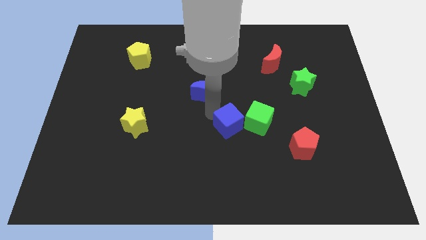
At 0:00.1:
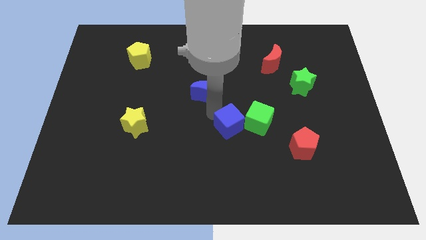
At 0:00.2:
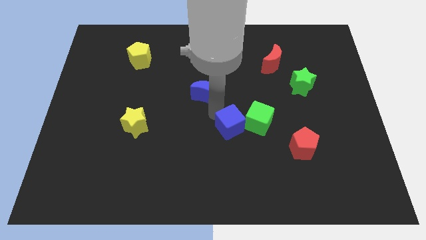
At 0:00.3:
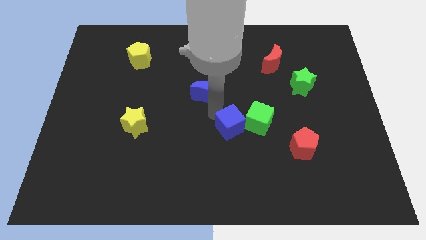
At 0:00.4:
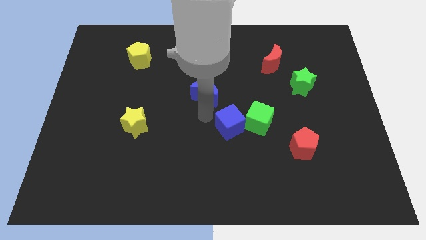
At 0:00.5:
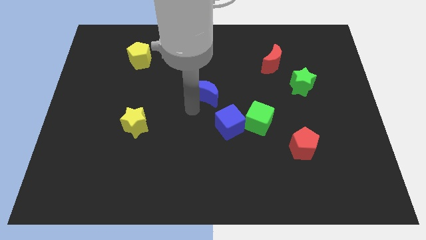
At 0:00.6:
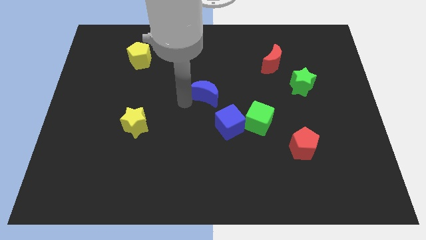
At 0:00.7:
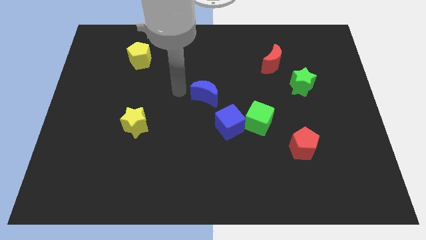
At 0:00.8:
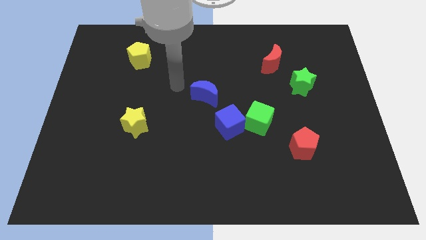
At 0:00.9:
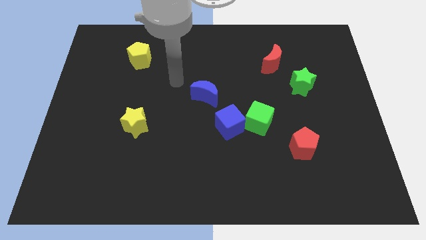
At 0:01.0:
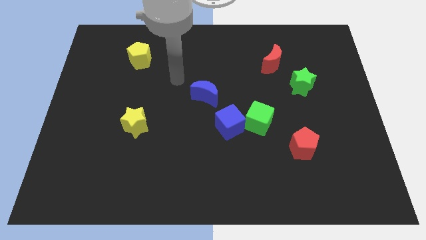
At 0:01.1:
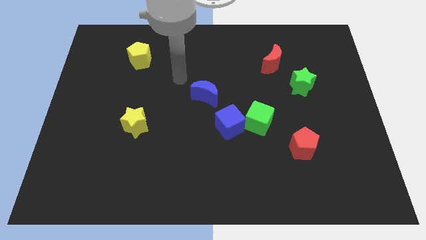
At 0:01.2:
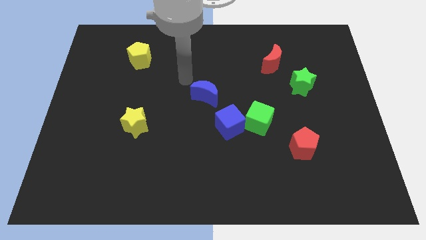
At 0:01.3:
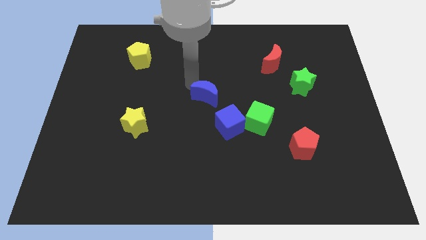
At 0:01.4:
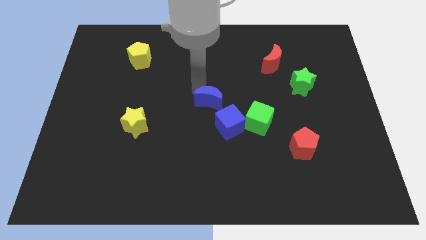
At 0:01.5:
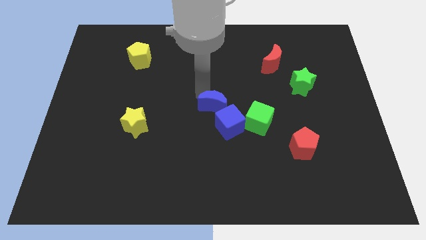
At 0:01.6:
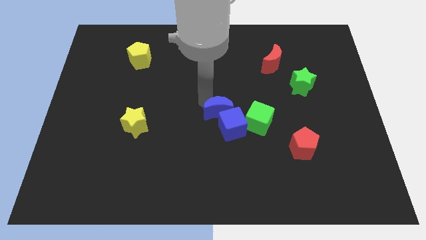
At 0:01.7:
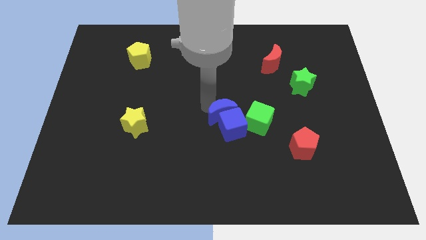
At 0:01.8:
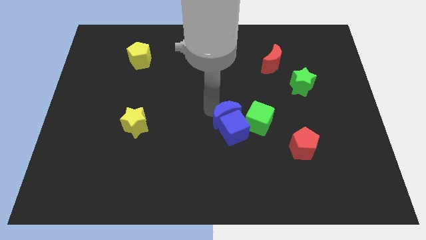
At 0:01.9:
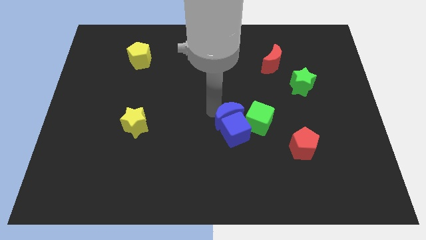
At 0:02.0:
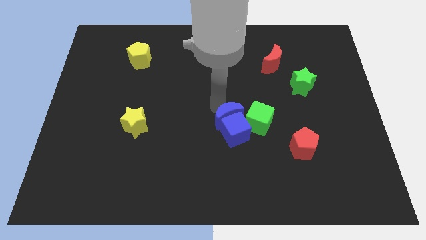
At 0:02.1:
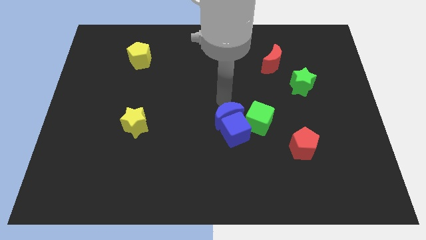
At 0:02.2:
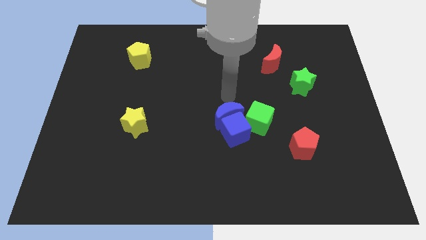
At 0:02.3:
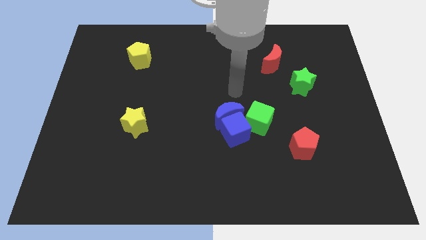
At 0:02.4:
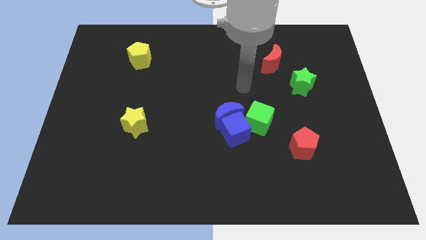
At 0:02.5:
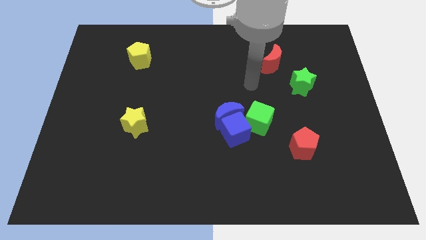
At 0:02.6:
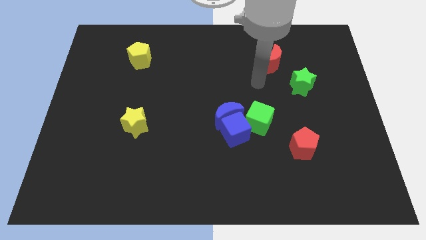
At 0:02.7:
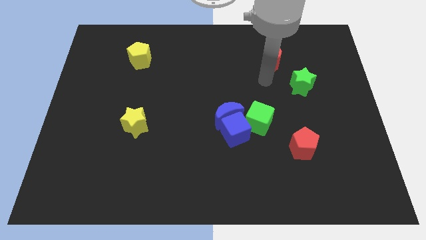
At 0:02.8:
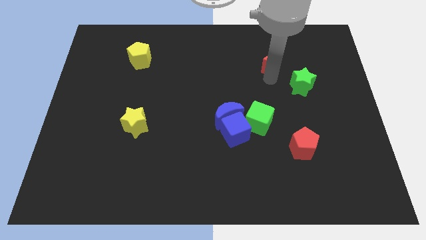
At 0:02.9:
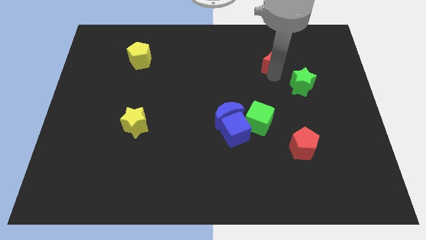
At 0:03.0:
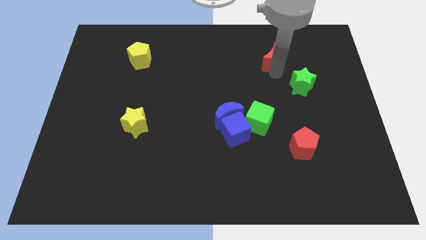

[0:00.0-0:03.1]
place the arm down to the red moon

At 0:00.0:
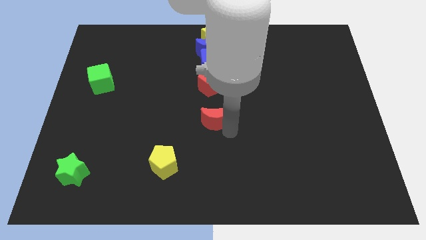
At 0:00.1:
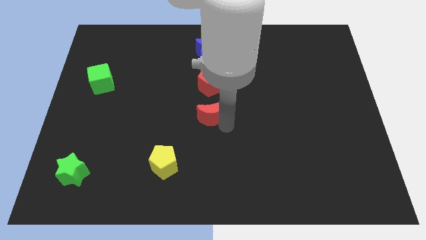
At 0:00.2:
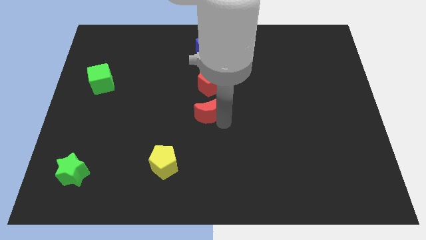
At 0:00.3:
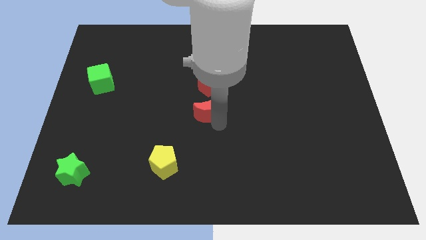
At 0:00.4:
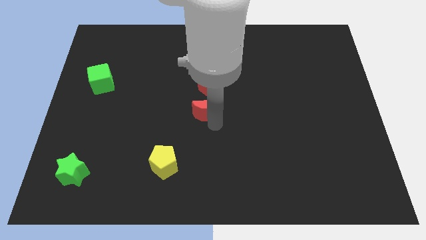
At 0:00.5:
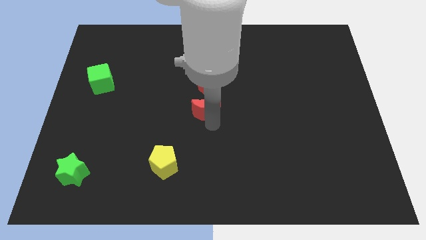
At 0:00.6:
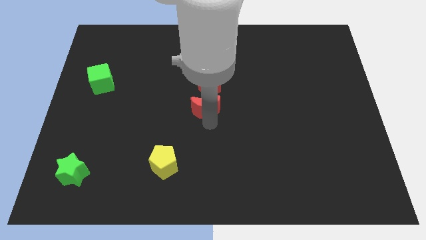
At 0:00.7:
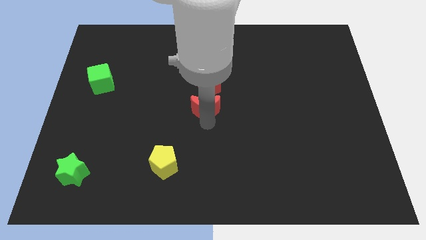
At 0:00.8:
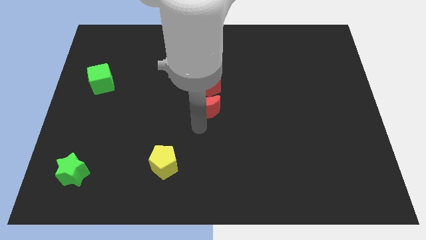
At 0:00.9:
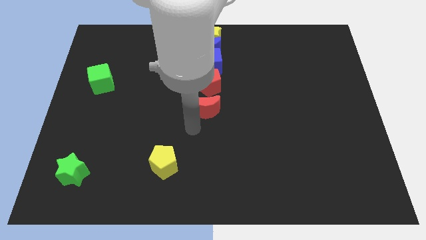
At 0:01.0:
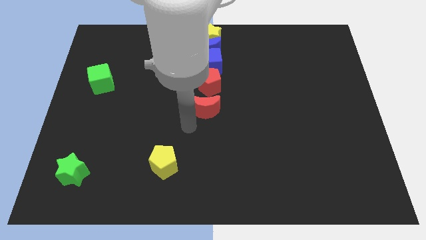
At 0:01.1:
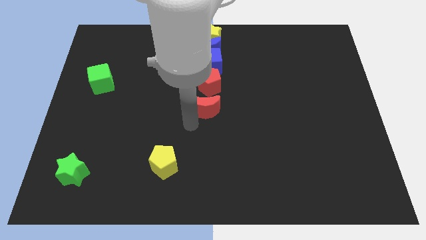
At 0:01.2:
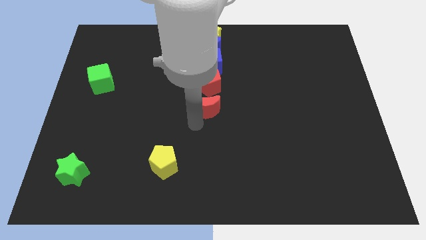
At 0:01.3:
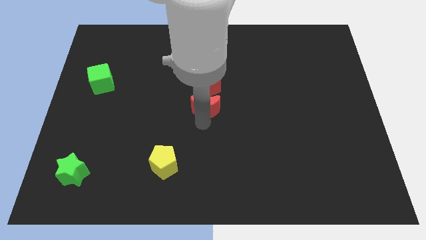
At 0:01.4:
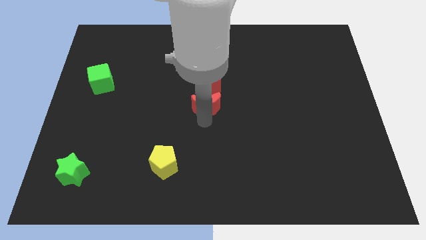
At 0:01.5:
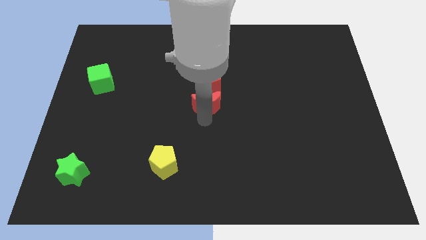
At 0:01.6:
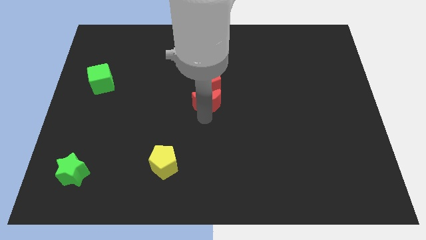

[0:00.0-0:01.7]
place the red crescent below the red pentagon

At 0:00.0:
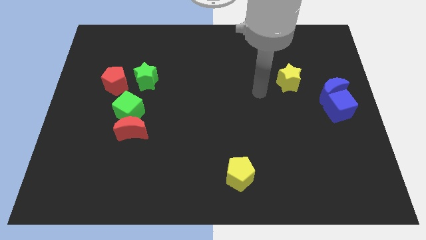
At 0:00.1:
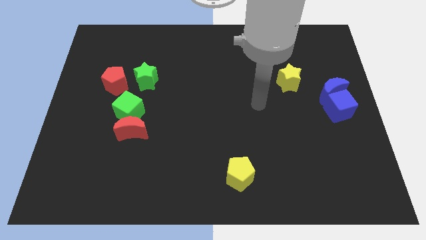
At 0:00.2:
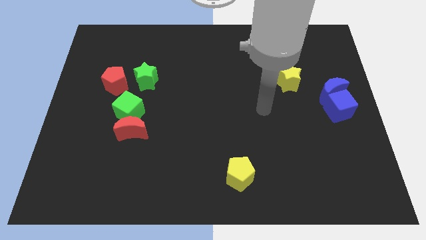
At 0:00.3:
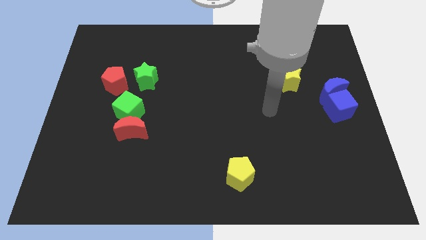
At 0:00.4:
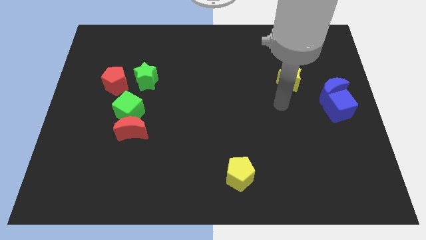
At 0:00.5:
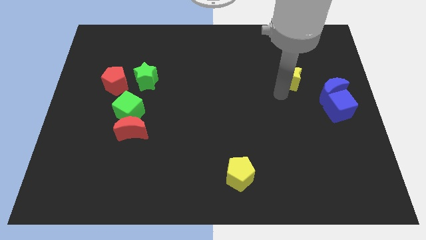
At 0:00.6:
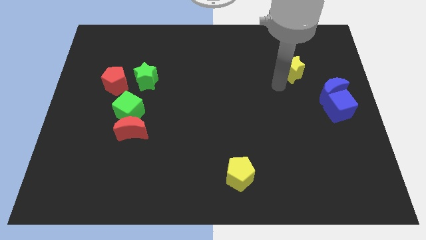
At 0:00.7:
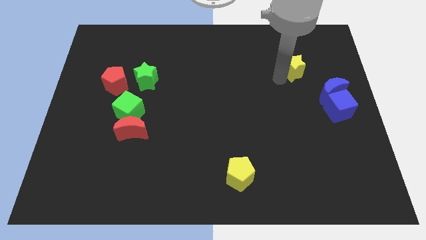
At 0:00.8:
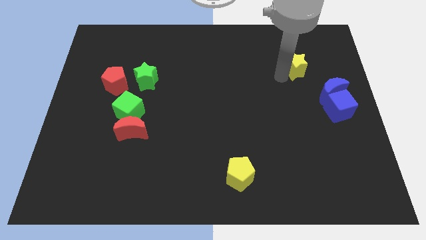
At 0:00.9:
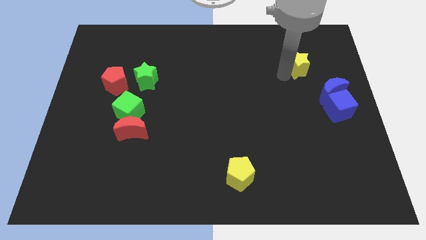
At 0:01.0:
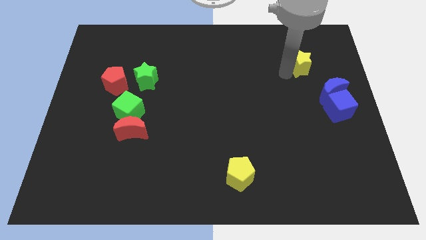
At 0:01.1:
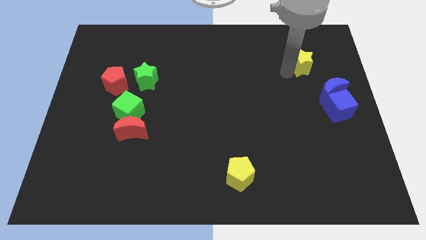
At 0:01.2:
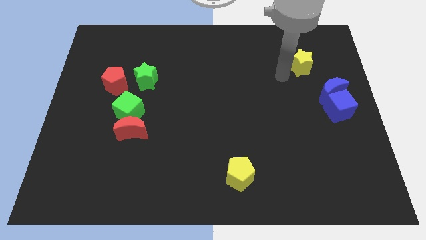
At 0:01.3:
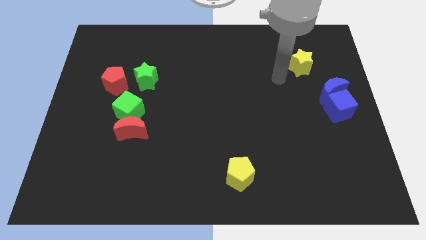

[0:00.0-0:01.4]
move the yellow star towards top right

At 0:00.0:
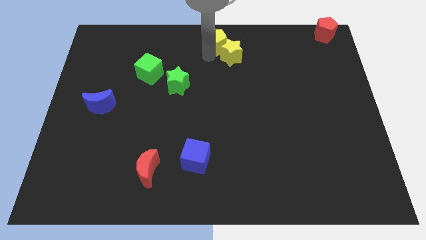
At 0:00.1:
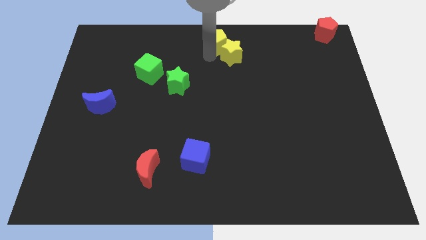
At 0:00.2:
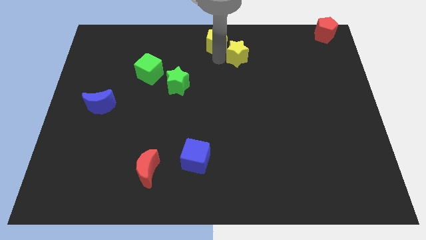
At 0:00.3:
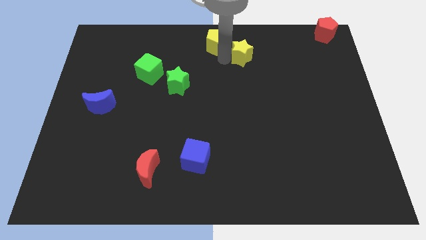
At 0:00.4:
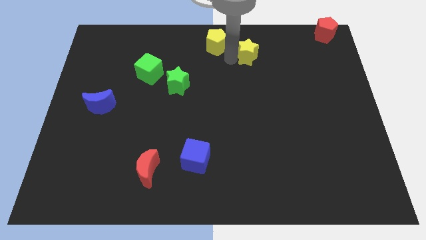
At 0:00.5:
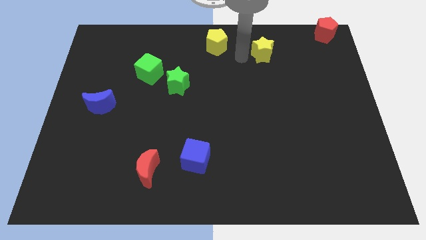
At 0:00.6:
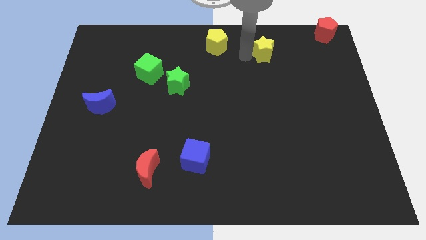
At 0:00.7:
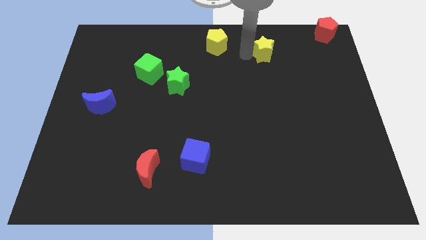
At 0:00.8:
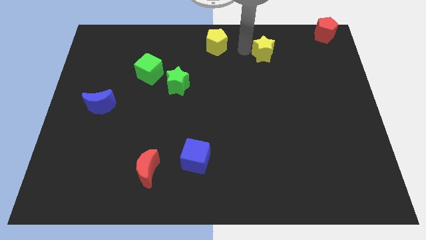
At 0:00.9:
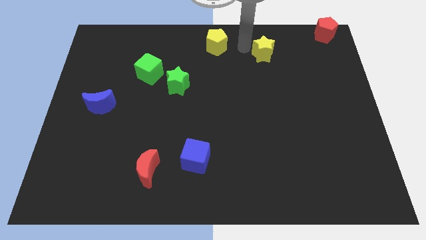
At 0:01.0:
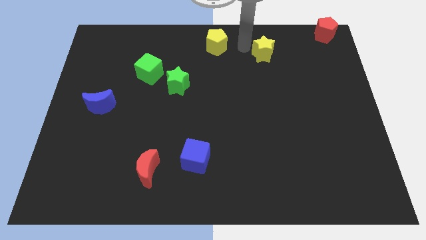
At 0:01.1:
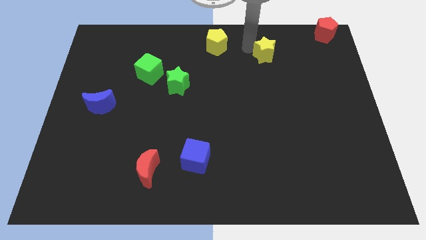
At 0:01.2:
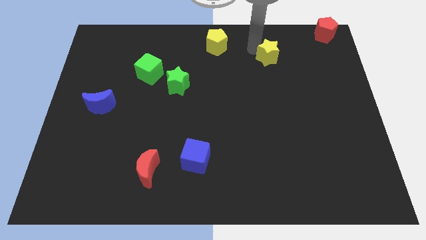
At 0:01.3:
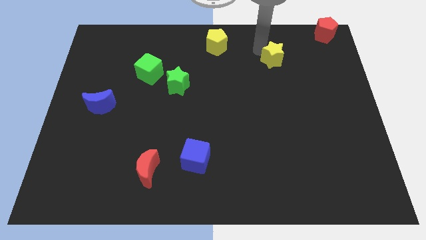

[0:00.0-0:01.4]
separate the yellow star from yellow pentagon

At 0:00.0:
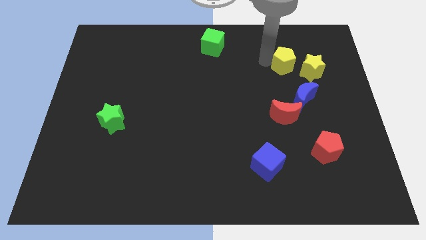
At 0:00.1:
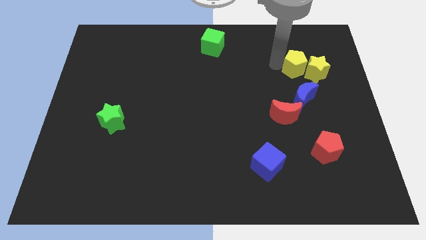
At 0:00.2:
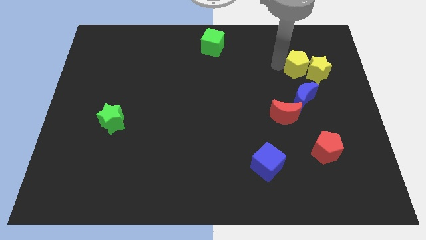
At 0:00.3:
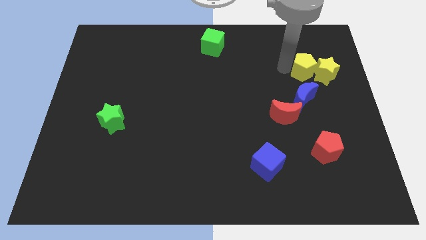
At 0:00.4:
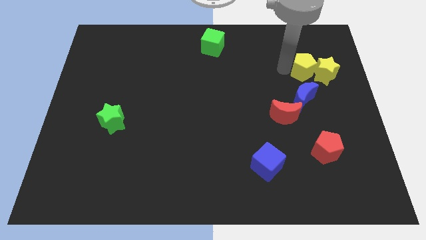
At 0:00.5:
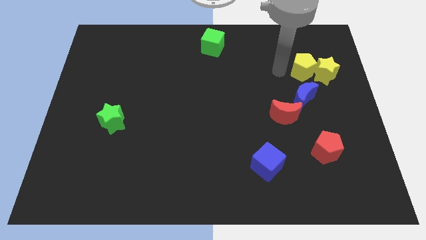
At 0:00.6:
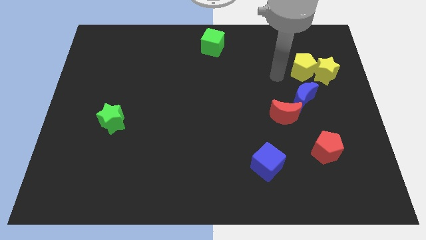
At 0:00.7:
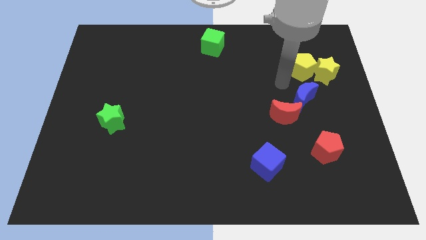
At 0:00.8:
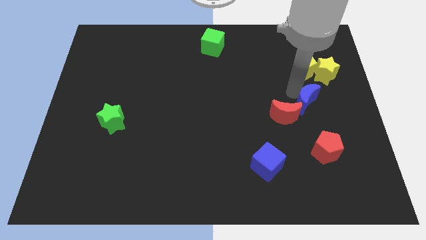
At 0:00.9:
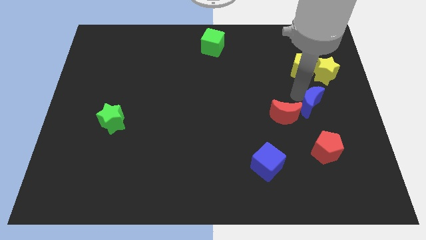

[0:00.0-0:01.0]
place the arm to the left of the blue moon

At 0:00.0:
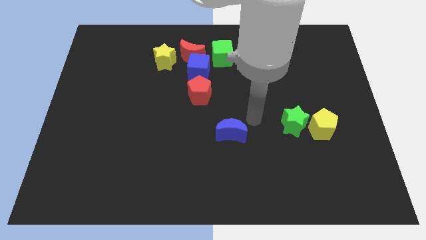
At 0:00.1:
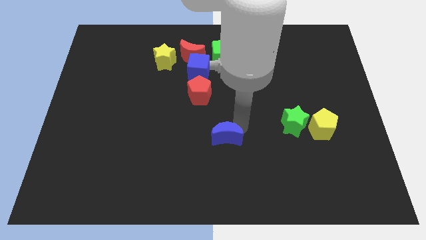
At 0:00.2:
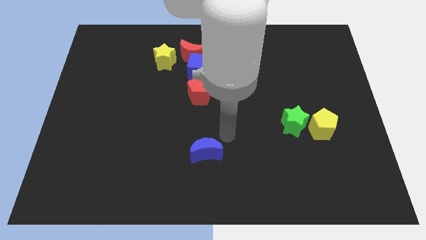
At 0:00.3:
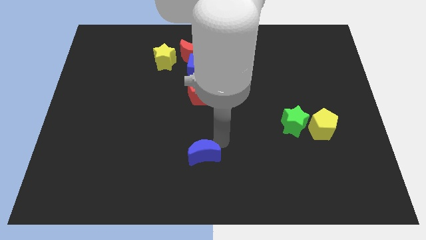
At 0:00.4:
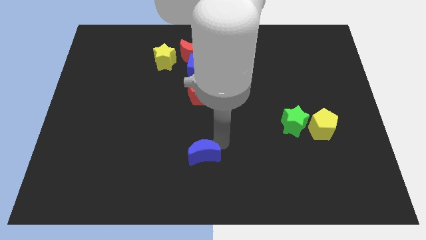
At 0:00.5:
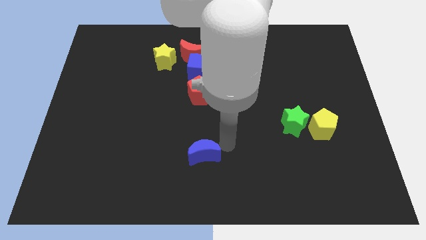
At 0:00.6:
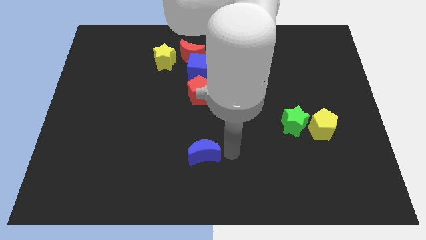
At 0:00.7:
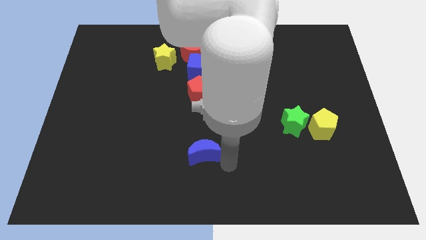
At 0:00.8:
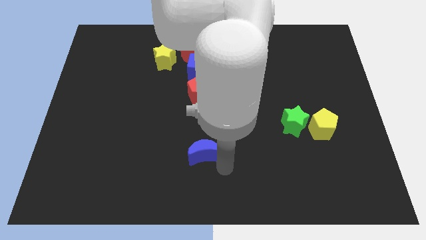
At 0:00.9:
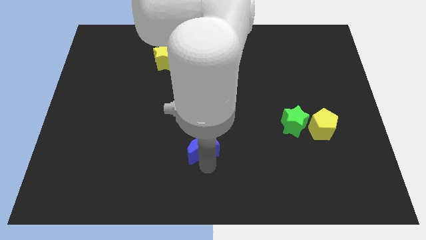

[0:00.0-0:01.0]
move the blue crescent vertically bottom to the red pentagon
